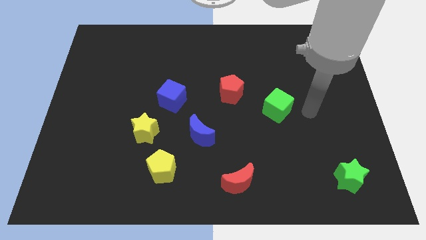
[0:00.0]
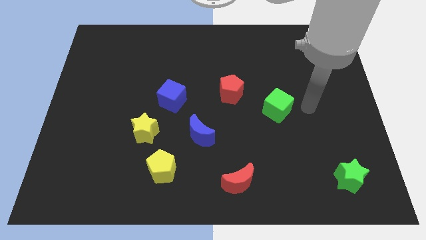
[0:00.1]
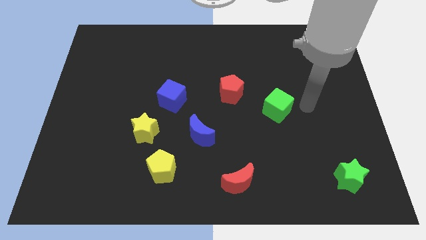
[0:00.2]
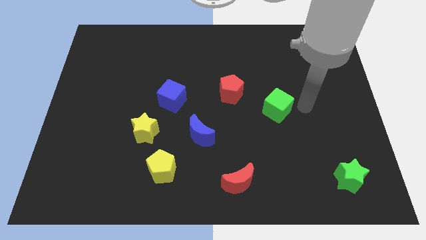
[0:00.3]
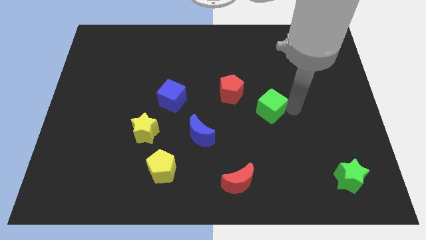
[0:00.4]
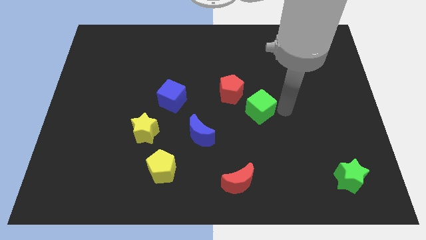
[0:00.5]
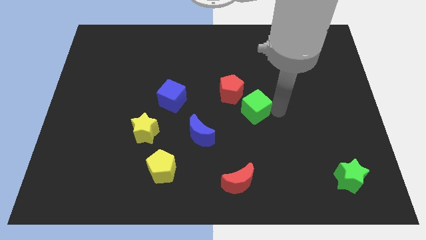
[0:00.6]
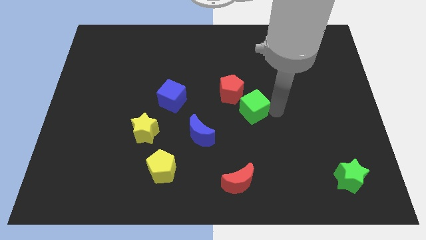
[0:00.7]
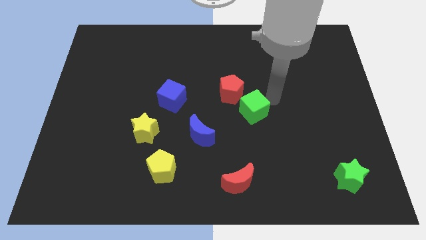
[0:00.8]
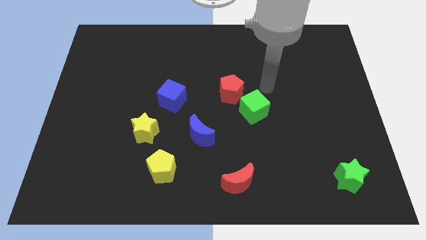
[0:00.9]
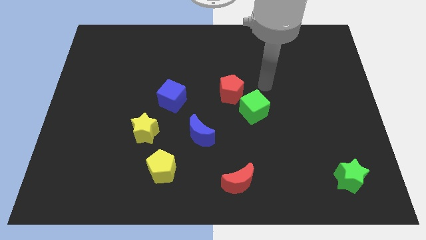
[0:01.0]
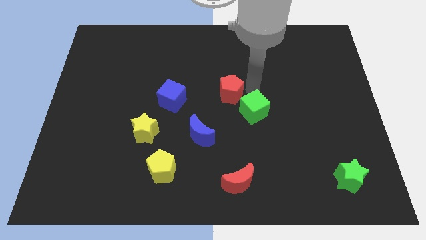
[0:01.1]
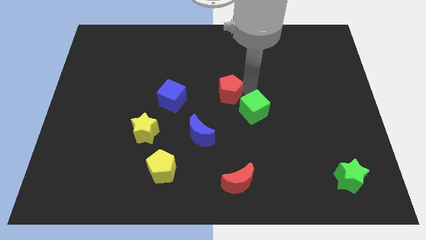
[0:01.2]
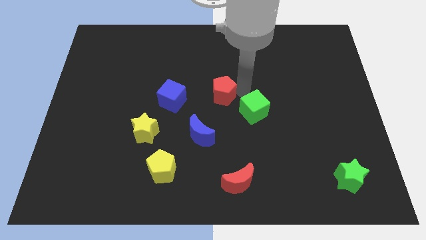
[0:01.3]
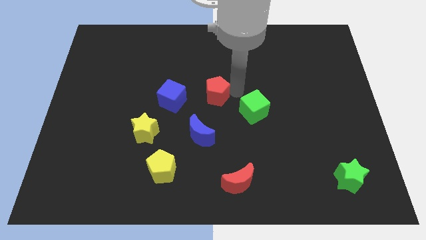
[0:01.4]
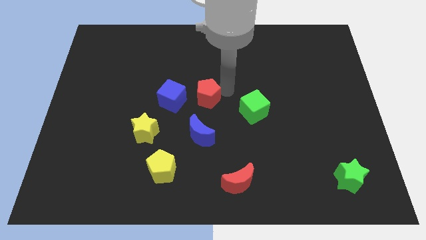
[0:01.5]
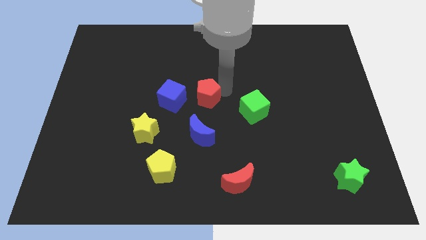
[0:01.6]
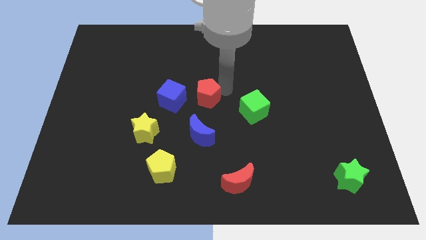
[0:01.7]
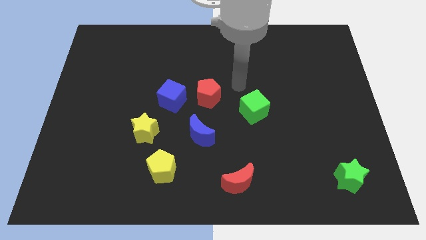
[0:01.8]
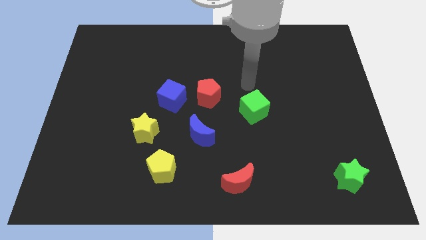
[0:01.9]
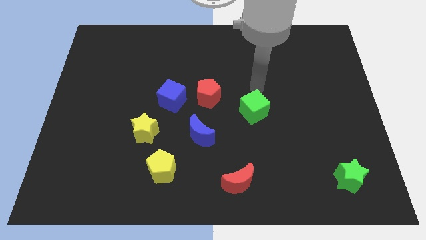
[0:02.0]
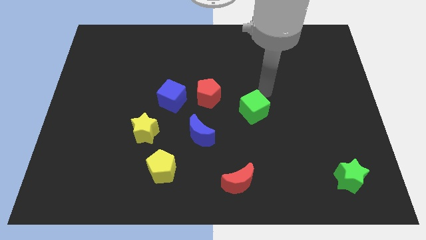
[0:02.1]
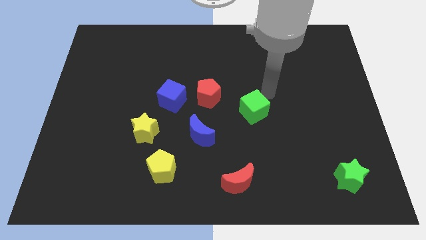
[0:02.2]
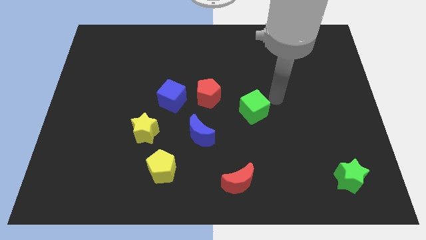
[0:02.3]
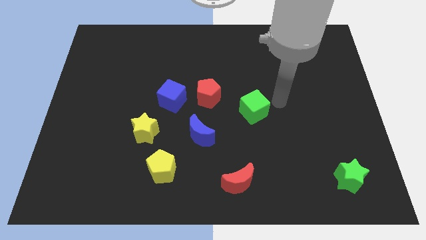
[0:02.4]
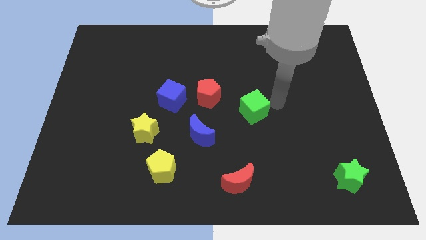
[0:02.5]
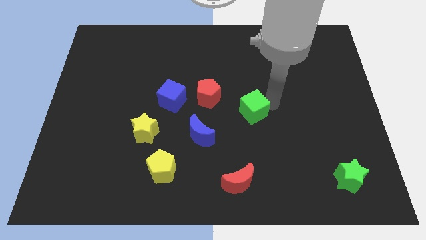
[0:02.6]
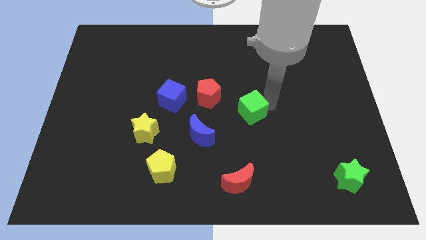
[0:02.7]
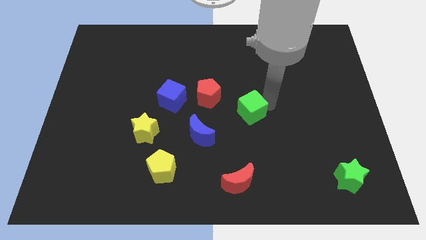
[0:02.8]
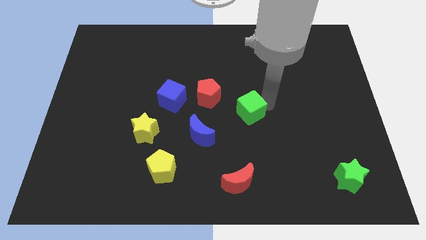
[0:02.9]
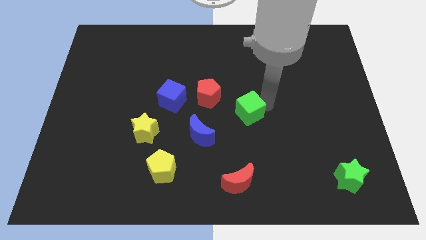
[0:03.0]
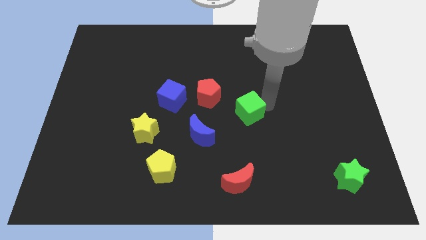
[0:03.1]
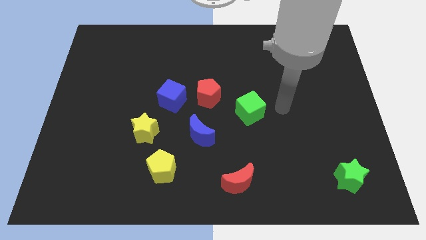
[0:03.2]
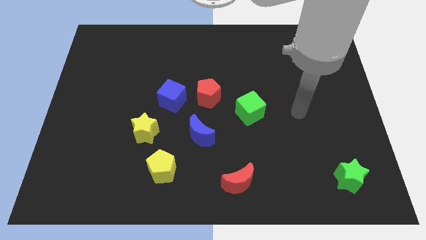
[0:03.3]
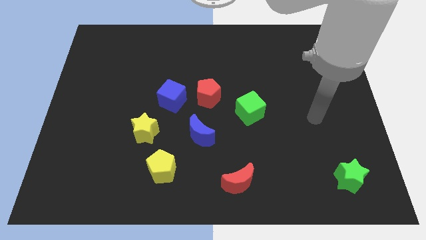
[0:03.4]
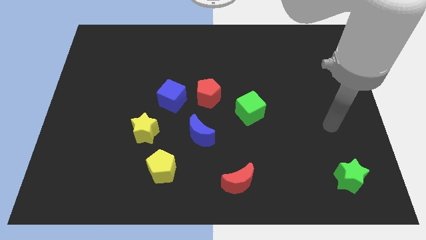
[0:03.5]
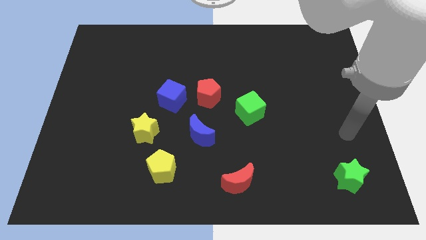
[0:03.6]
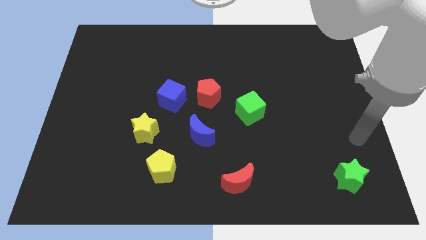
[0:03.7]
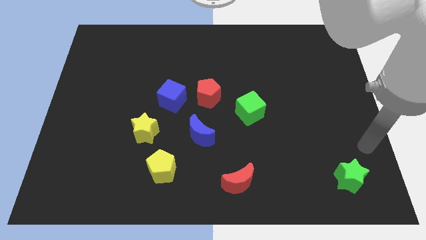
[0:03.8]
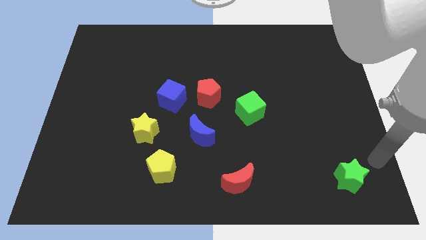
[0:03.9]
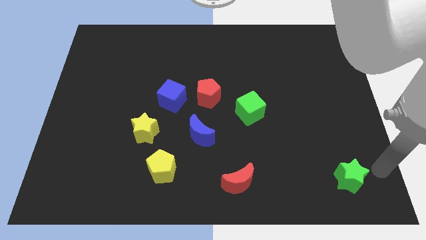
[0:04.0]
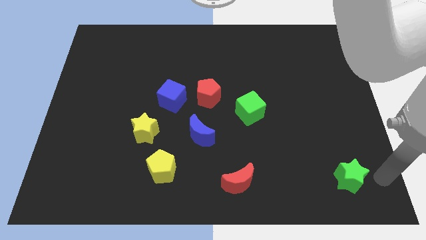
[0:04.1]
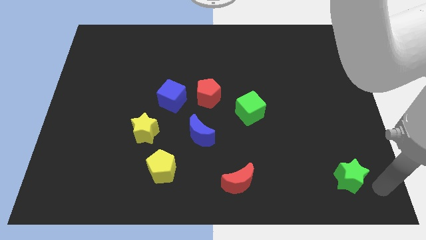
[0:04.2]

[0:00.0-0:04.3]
push green cube towards red pentagon

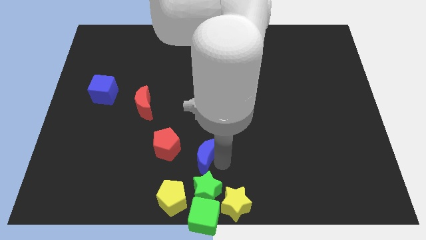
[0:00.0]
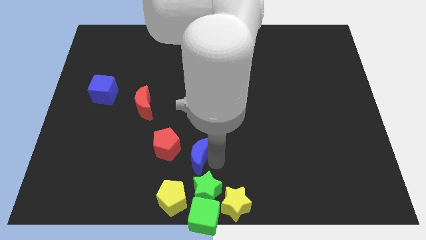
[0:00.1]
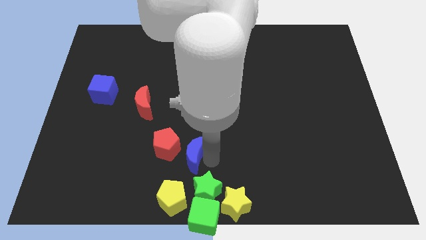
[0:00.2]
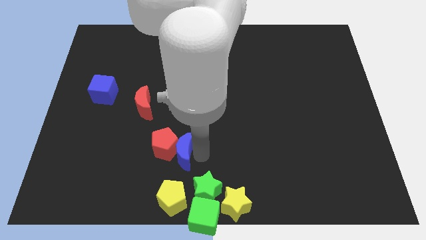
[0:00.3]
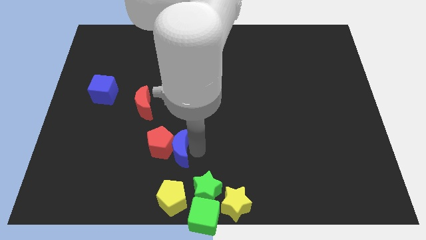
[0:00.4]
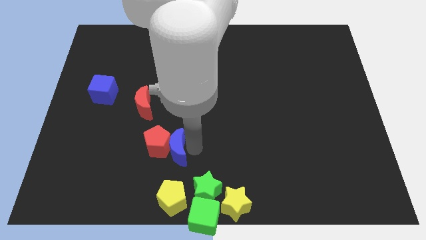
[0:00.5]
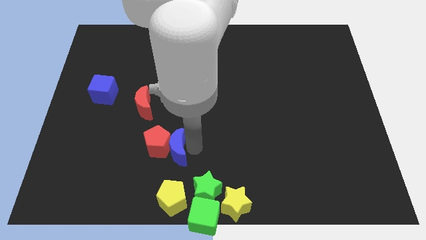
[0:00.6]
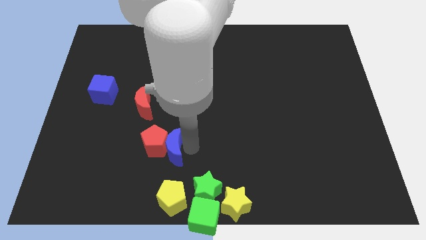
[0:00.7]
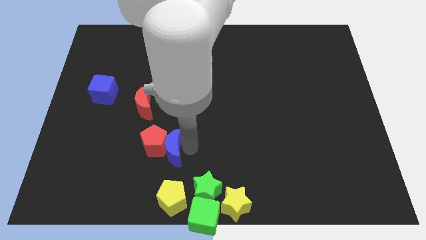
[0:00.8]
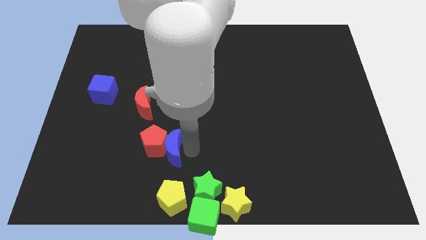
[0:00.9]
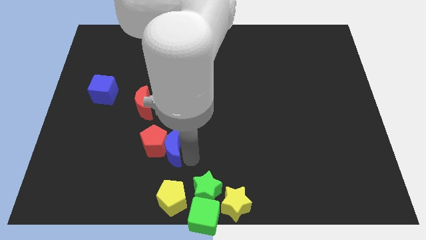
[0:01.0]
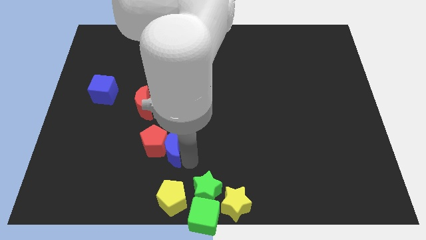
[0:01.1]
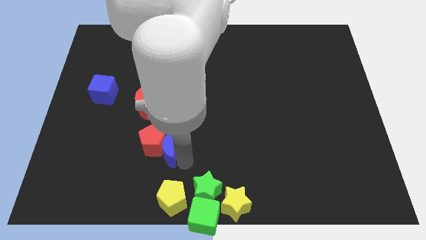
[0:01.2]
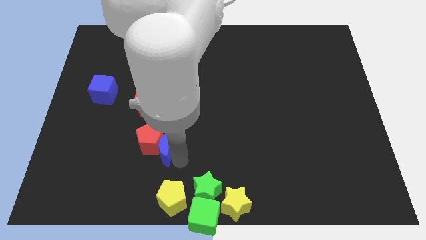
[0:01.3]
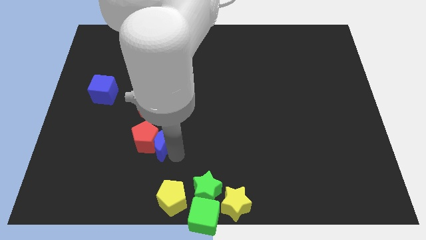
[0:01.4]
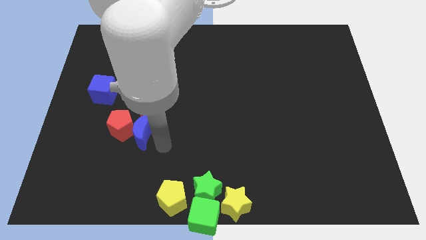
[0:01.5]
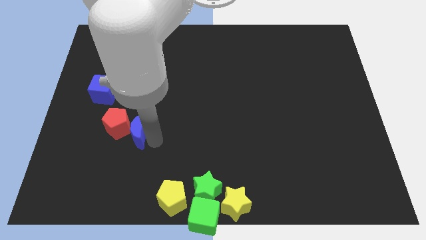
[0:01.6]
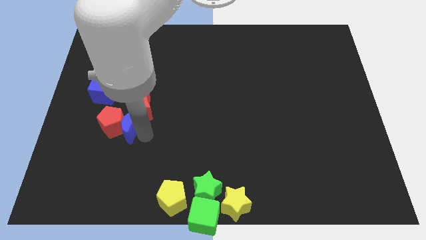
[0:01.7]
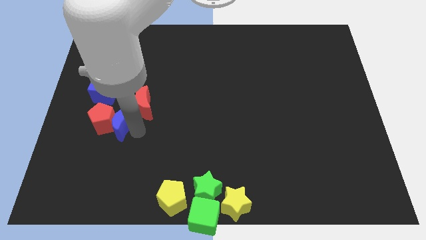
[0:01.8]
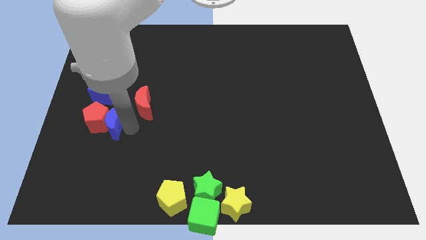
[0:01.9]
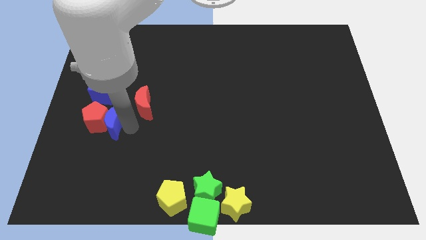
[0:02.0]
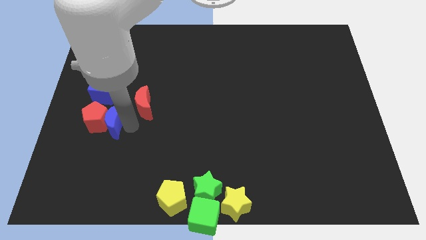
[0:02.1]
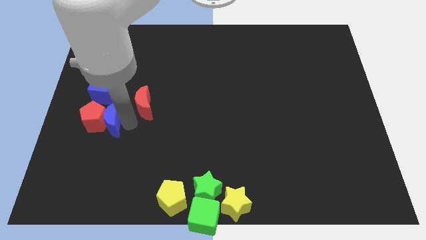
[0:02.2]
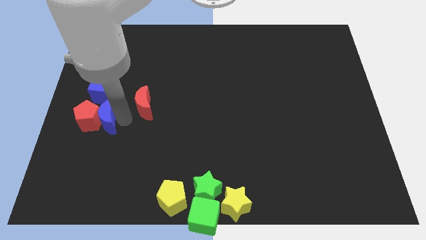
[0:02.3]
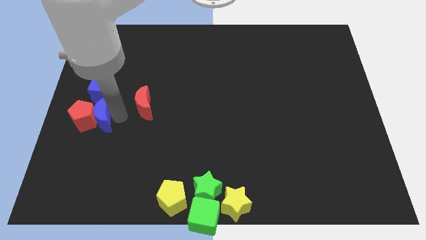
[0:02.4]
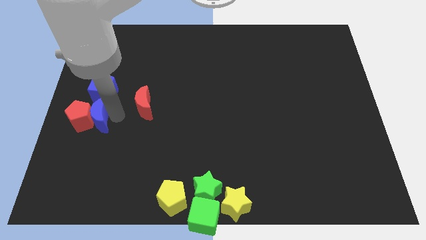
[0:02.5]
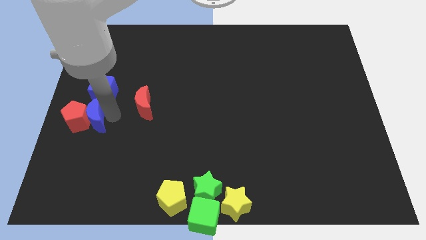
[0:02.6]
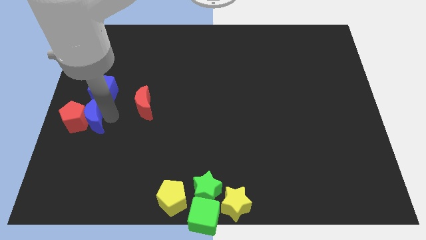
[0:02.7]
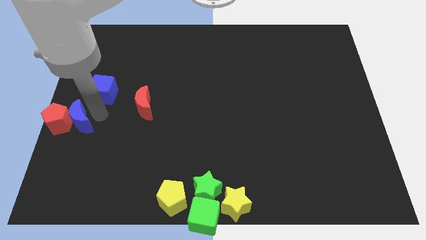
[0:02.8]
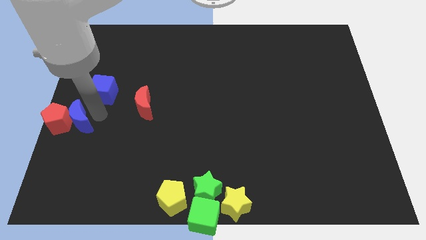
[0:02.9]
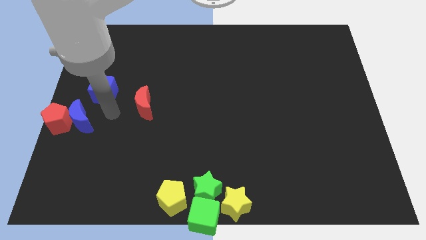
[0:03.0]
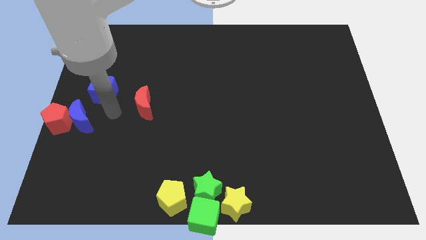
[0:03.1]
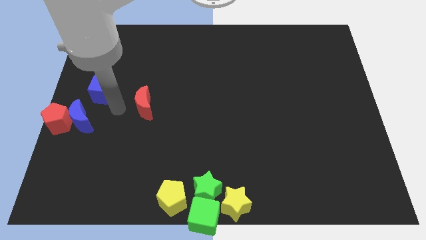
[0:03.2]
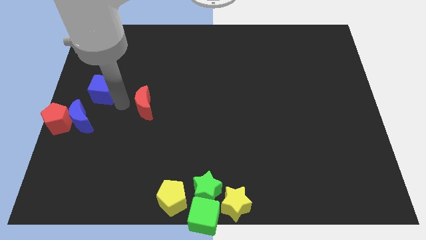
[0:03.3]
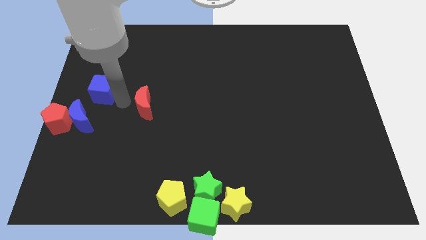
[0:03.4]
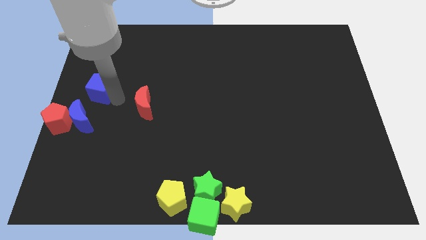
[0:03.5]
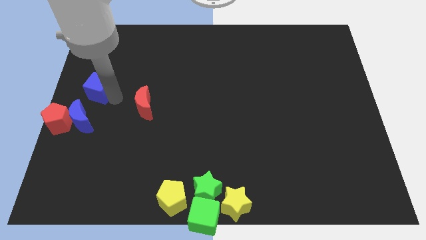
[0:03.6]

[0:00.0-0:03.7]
move the red pentagon and blue moon to the center left

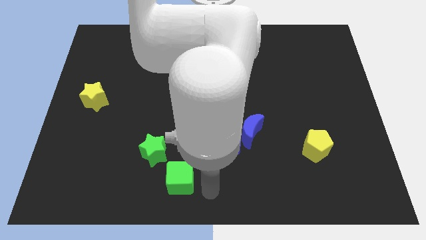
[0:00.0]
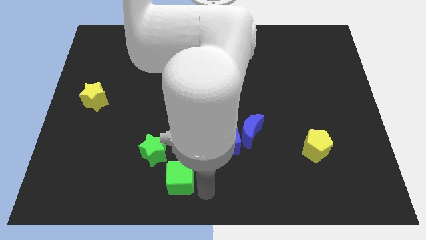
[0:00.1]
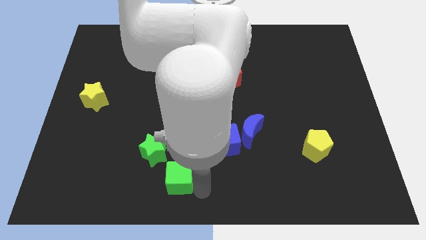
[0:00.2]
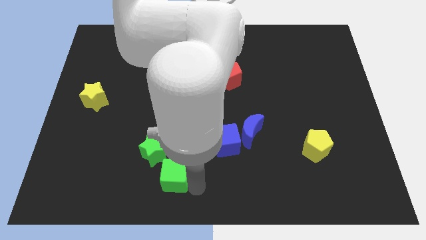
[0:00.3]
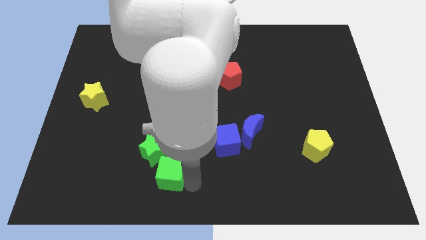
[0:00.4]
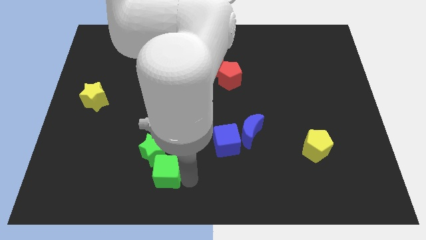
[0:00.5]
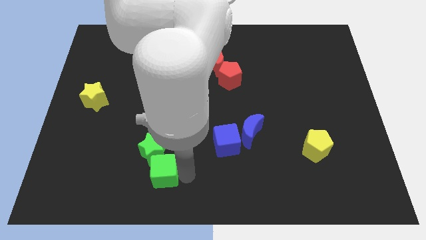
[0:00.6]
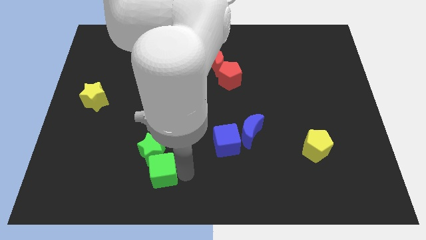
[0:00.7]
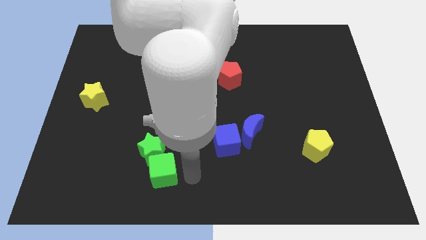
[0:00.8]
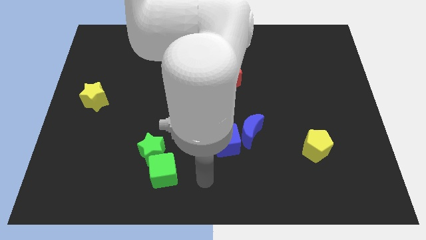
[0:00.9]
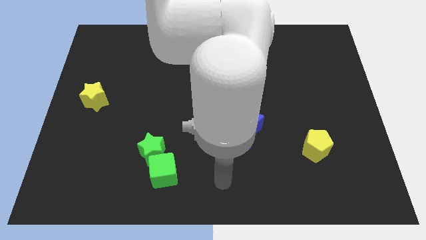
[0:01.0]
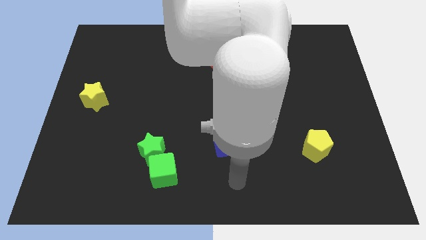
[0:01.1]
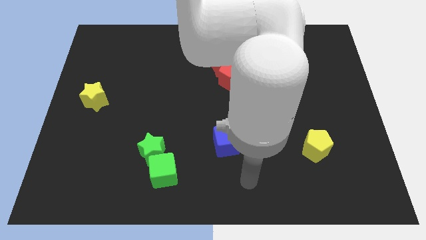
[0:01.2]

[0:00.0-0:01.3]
place the green cube below the green star
